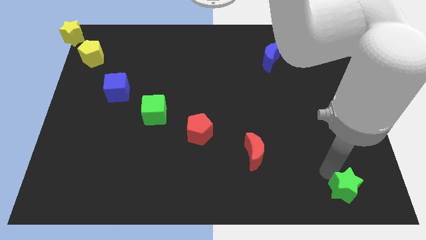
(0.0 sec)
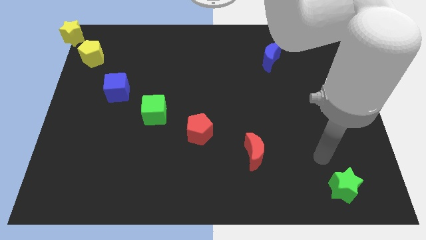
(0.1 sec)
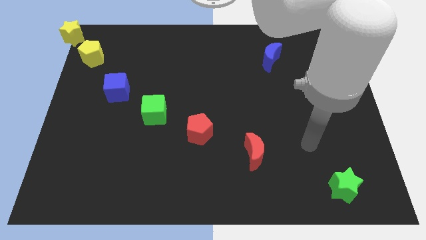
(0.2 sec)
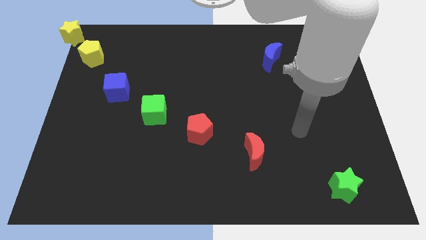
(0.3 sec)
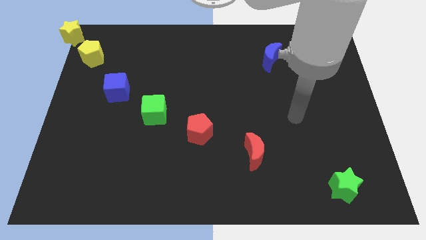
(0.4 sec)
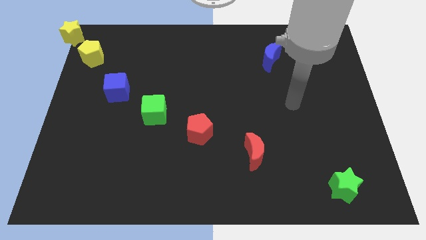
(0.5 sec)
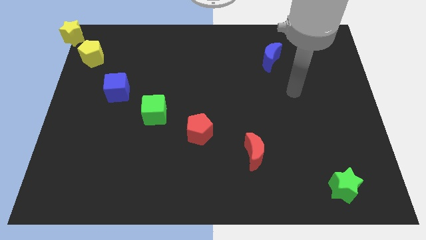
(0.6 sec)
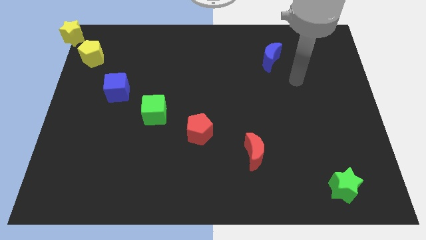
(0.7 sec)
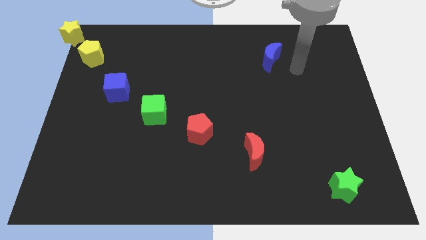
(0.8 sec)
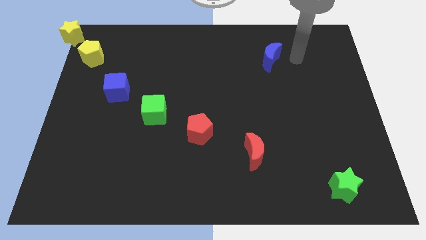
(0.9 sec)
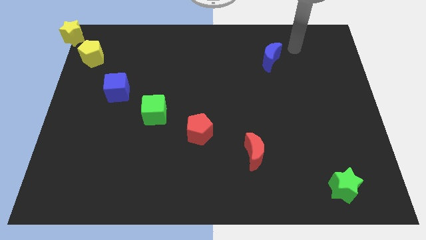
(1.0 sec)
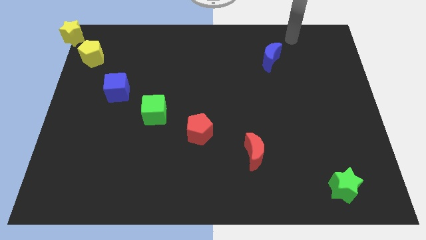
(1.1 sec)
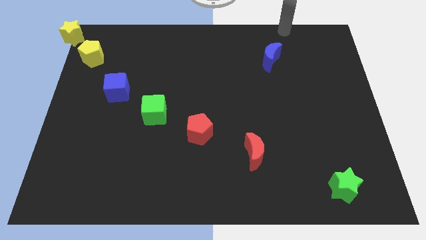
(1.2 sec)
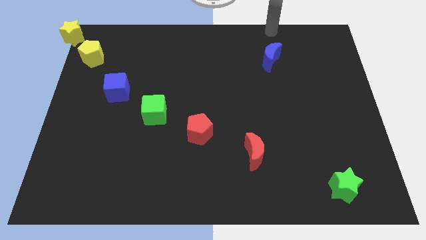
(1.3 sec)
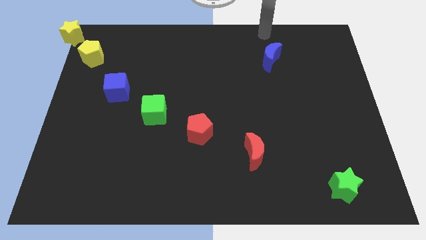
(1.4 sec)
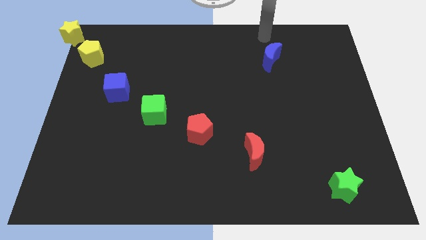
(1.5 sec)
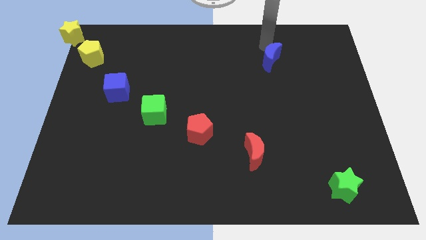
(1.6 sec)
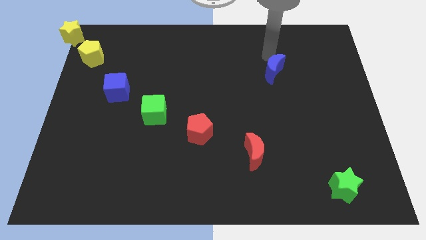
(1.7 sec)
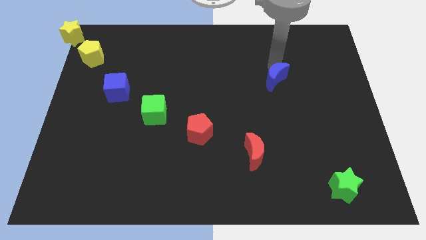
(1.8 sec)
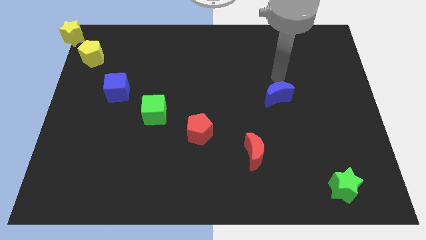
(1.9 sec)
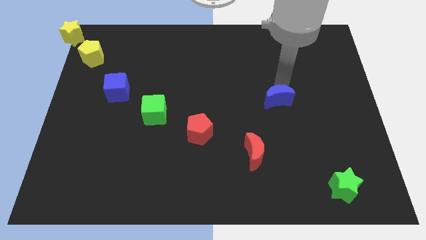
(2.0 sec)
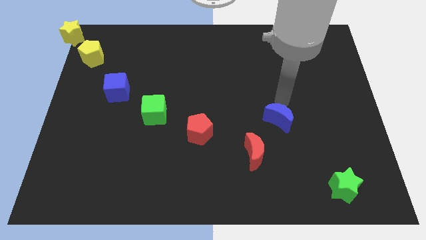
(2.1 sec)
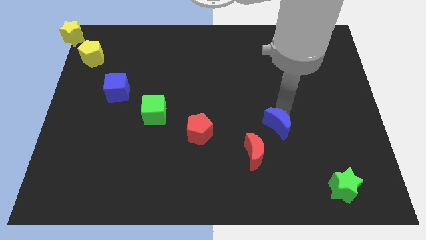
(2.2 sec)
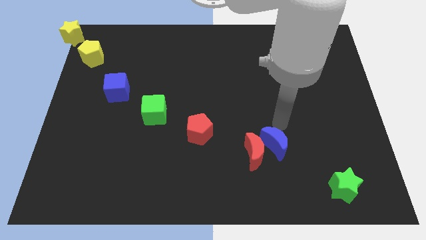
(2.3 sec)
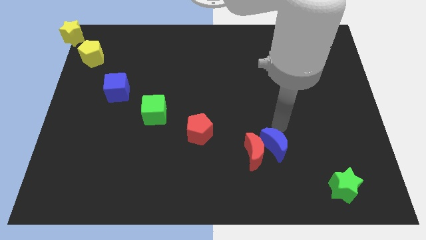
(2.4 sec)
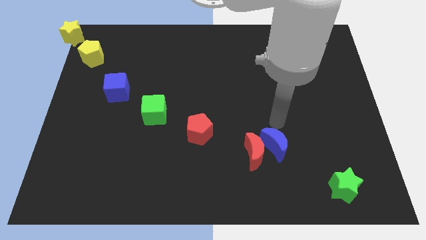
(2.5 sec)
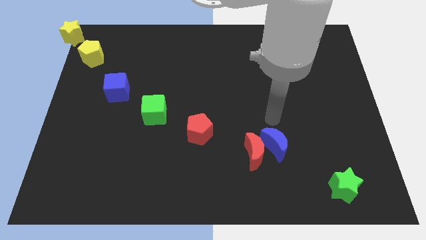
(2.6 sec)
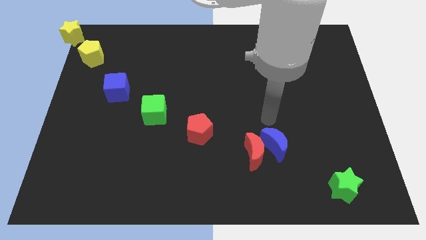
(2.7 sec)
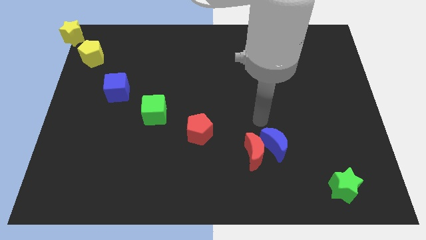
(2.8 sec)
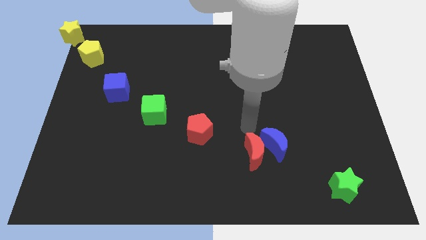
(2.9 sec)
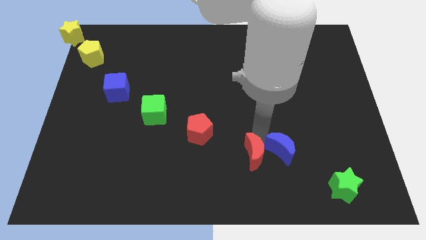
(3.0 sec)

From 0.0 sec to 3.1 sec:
put the blue moon on the right side of the red moon

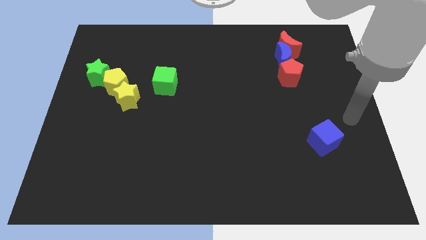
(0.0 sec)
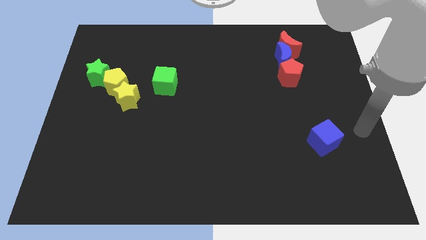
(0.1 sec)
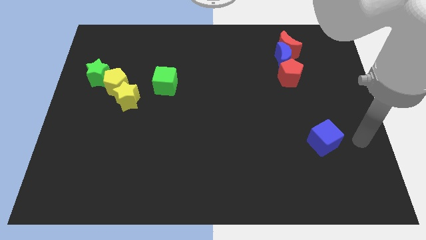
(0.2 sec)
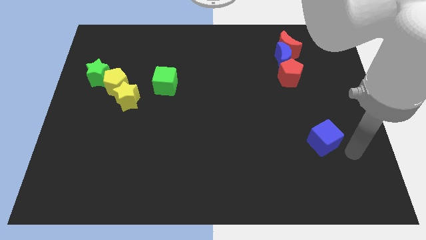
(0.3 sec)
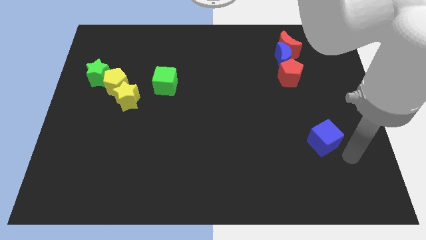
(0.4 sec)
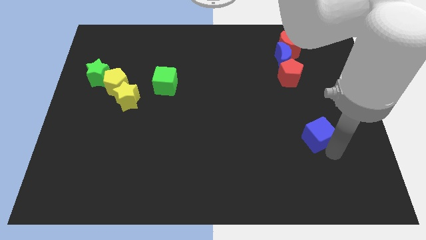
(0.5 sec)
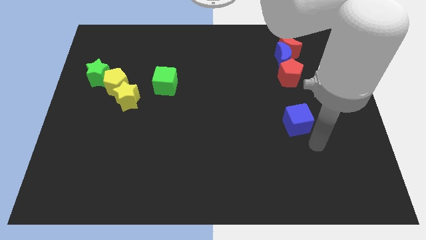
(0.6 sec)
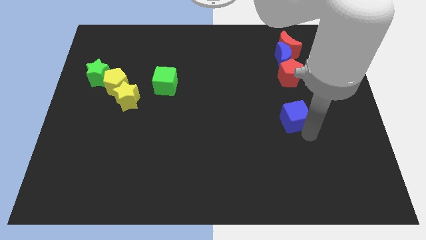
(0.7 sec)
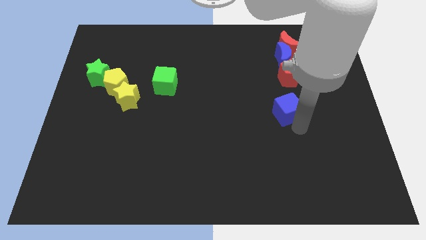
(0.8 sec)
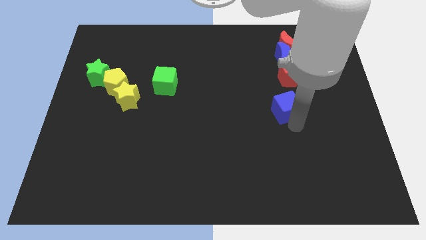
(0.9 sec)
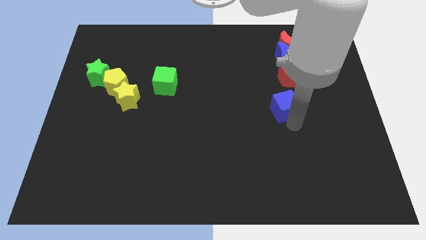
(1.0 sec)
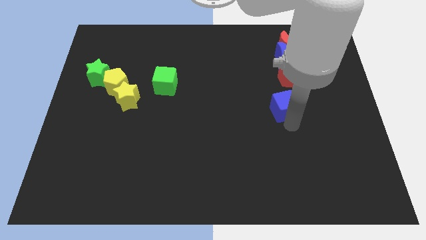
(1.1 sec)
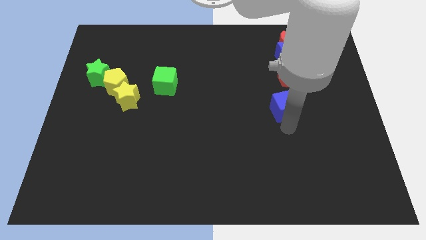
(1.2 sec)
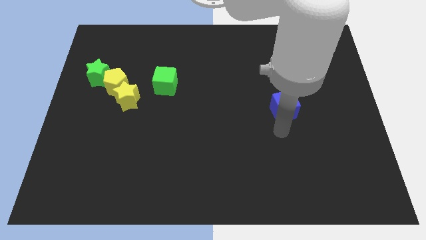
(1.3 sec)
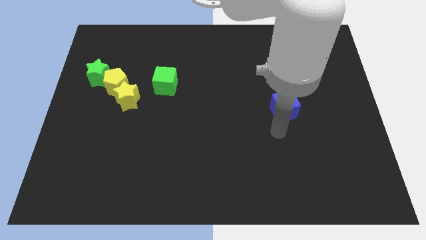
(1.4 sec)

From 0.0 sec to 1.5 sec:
push the blue cube to the bottom side of the red pentagon

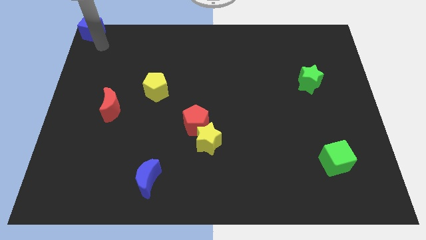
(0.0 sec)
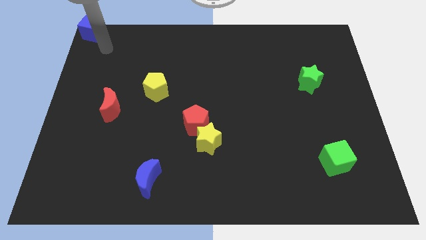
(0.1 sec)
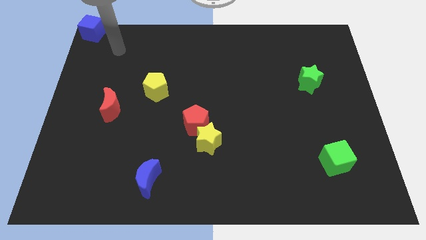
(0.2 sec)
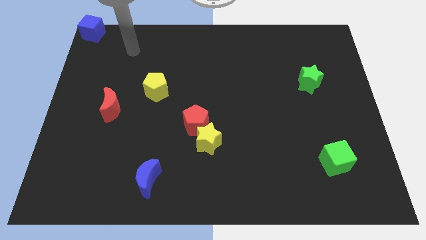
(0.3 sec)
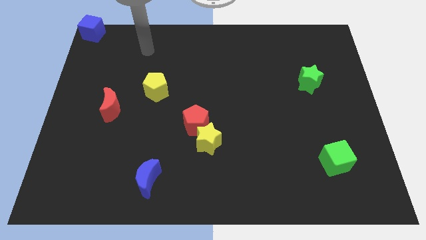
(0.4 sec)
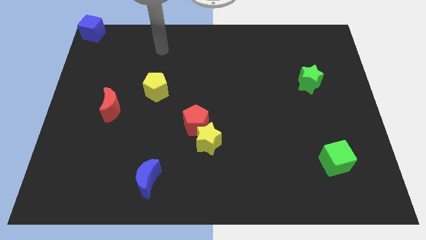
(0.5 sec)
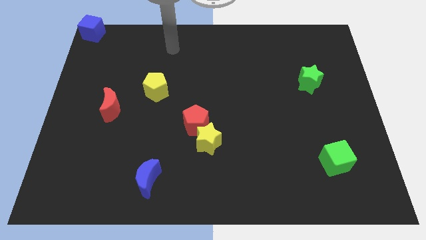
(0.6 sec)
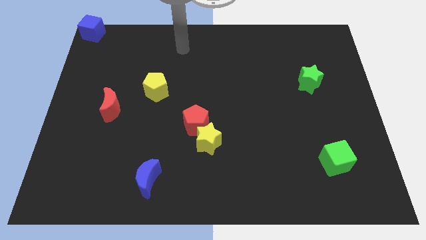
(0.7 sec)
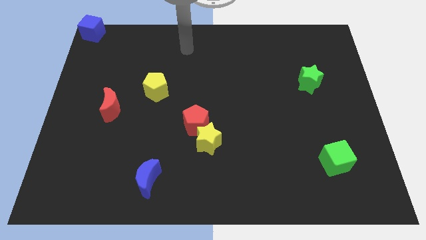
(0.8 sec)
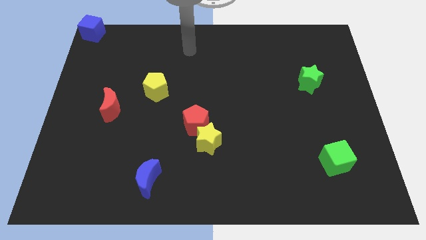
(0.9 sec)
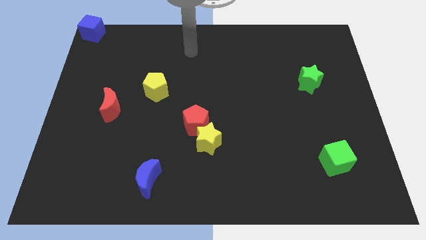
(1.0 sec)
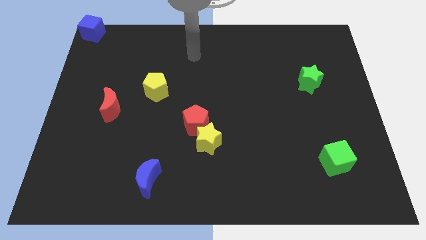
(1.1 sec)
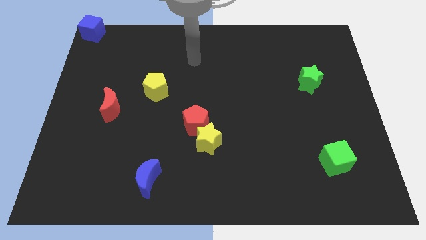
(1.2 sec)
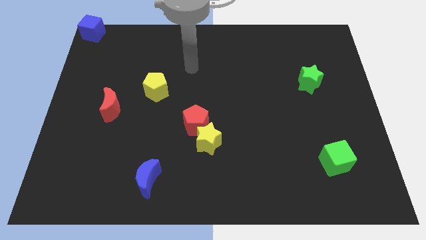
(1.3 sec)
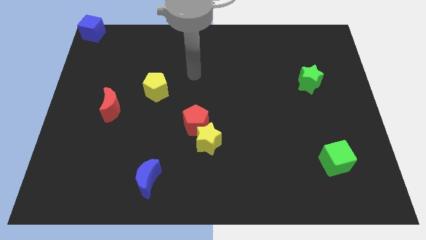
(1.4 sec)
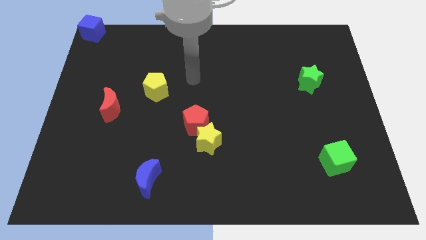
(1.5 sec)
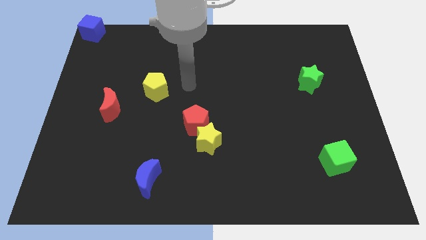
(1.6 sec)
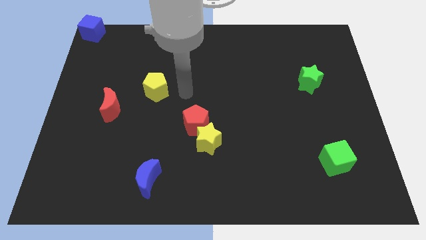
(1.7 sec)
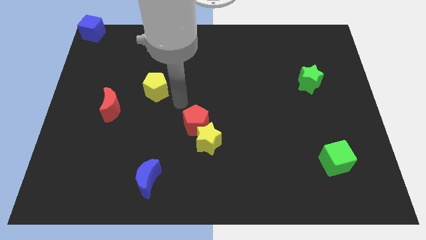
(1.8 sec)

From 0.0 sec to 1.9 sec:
move your arm in between the yellow pentagon and red pentagon

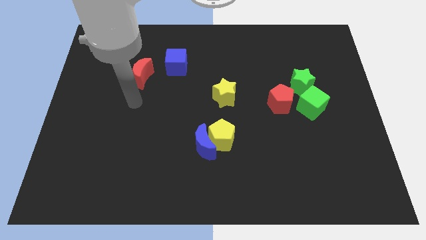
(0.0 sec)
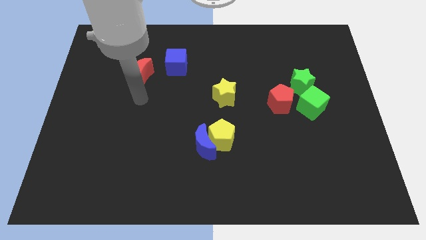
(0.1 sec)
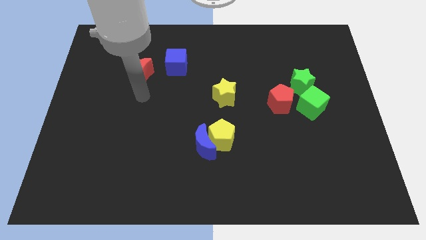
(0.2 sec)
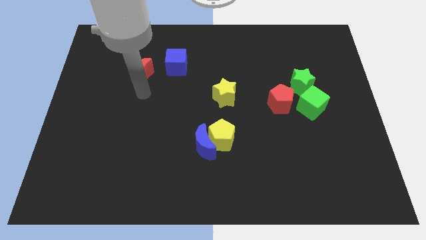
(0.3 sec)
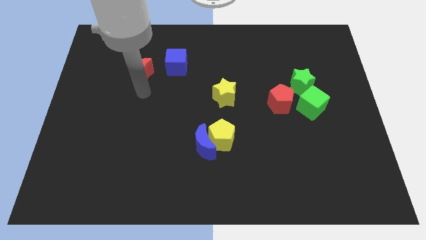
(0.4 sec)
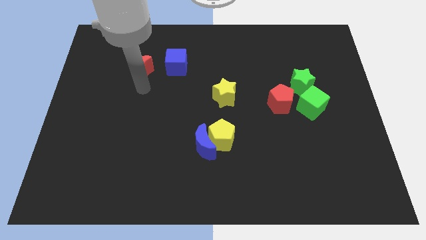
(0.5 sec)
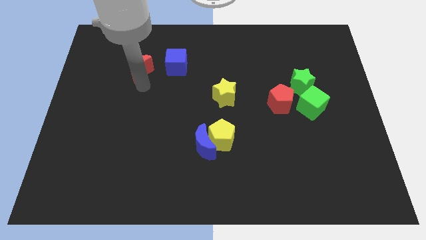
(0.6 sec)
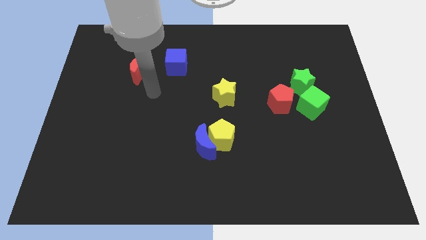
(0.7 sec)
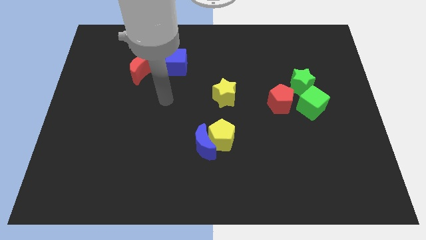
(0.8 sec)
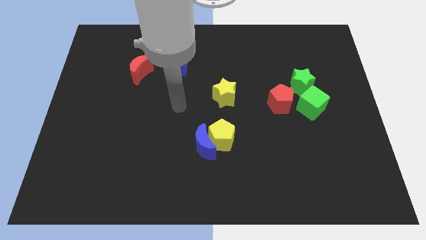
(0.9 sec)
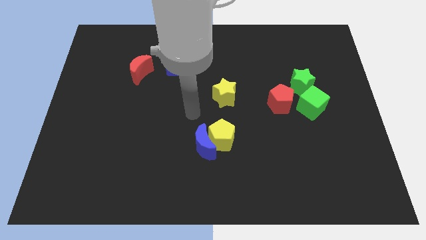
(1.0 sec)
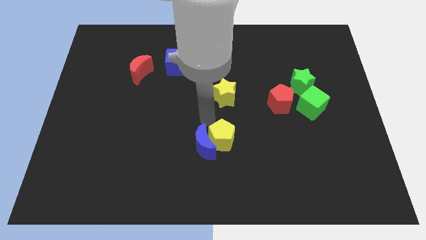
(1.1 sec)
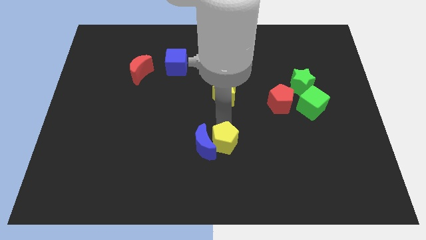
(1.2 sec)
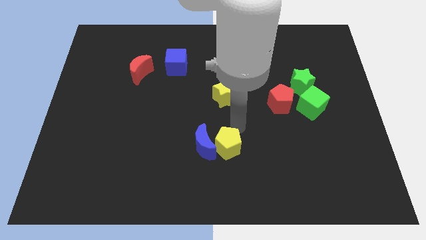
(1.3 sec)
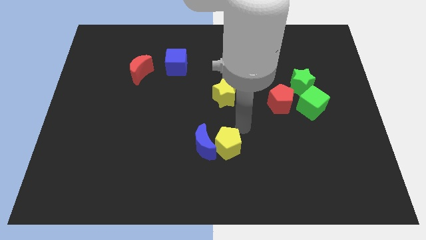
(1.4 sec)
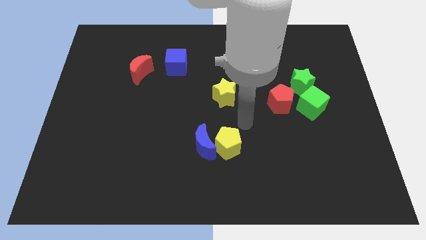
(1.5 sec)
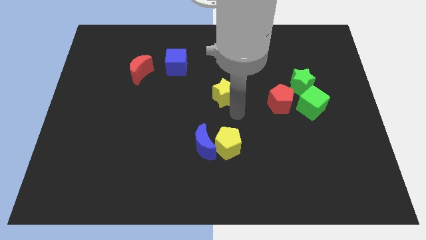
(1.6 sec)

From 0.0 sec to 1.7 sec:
tap the yellow pentagon

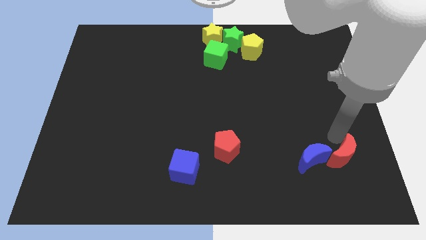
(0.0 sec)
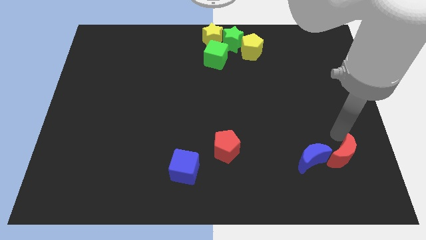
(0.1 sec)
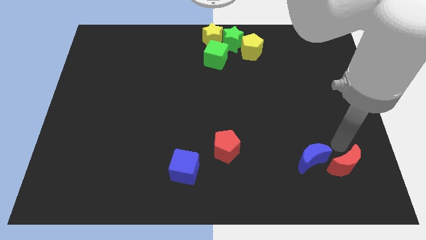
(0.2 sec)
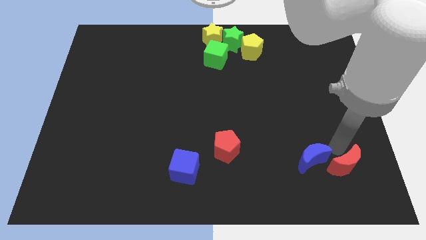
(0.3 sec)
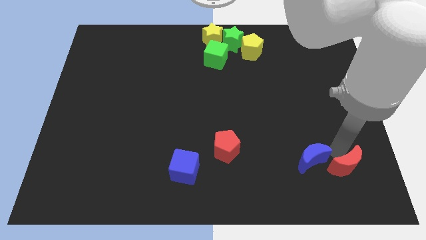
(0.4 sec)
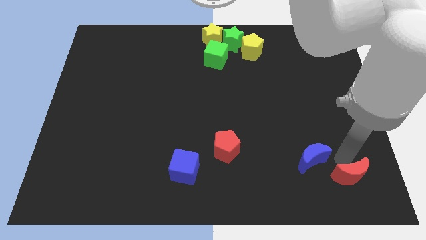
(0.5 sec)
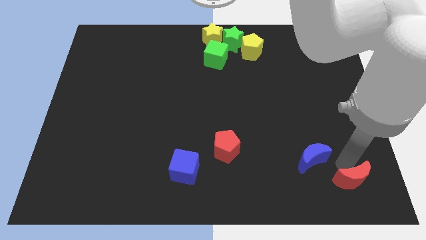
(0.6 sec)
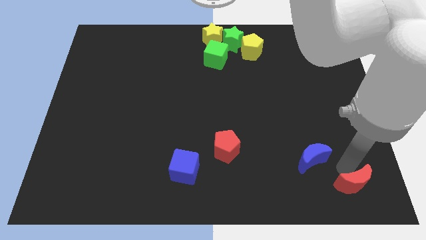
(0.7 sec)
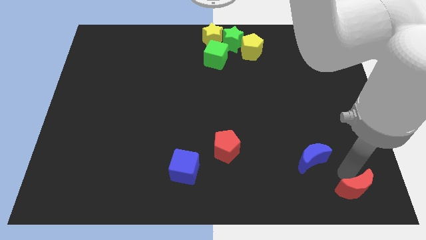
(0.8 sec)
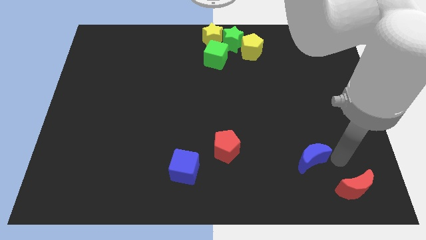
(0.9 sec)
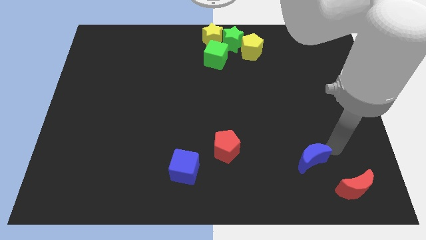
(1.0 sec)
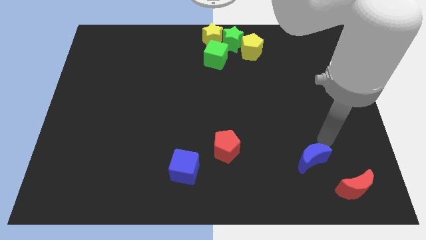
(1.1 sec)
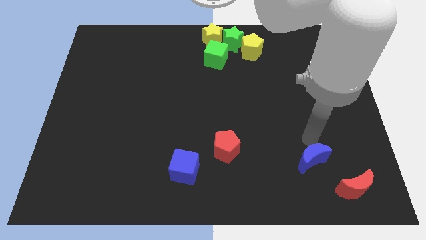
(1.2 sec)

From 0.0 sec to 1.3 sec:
move the red crescent to the bottom right corner
